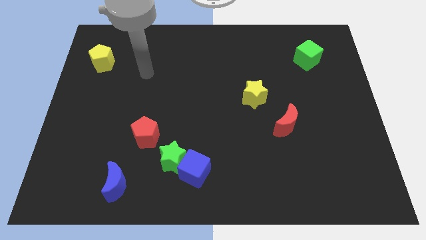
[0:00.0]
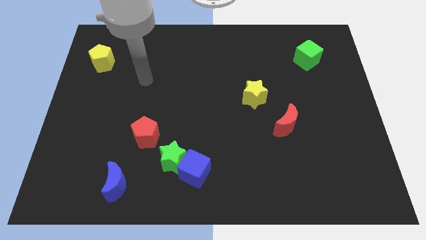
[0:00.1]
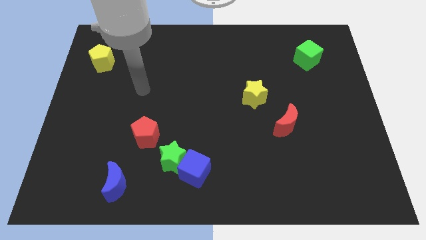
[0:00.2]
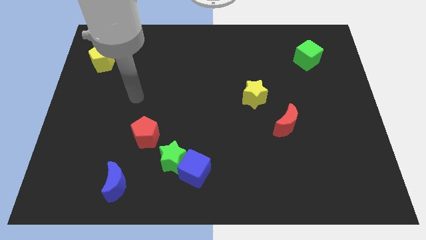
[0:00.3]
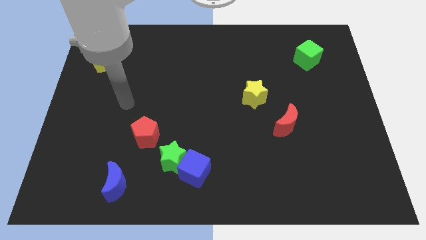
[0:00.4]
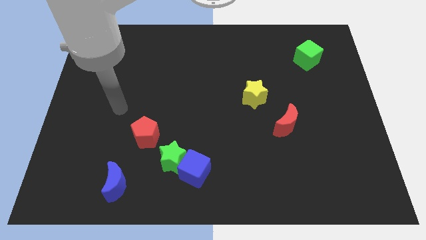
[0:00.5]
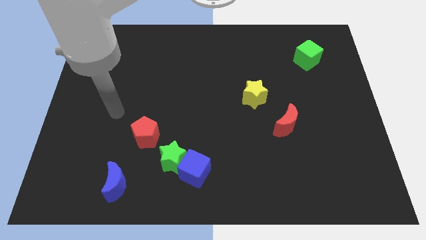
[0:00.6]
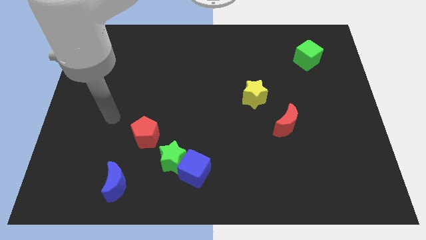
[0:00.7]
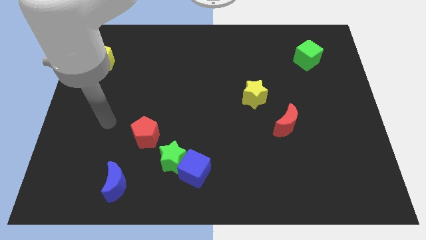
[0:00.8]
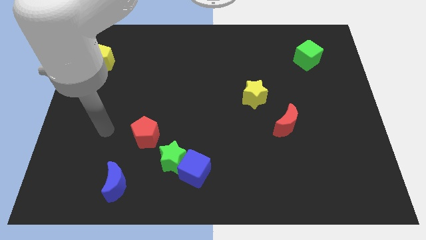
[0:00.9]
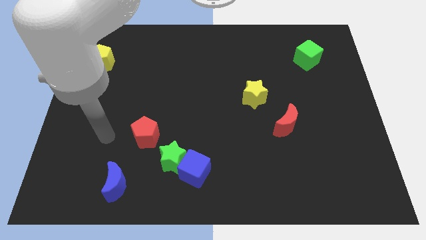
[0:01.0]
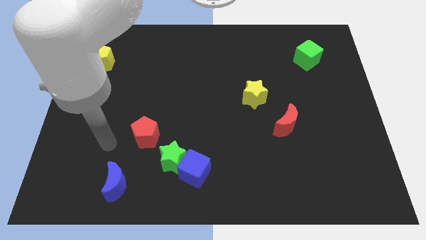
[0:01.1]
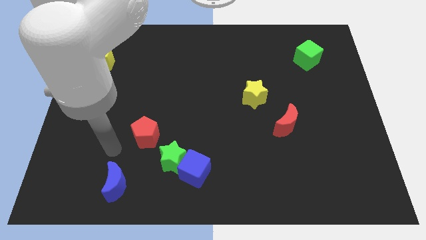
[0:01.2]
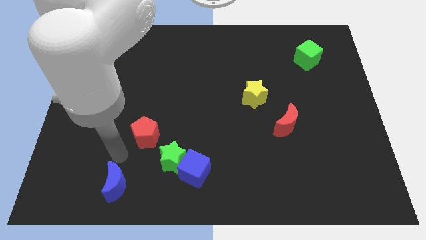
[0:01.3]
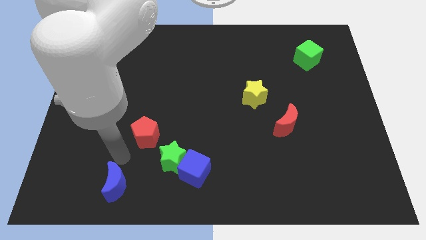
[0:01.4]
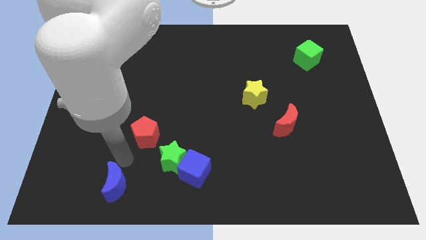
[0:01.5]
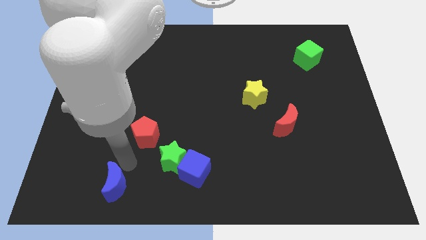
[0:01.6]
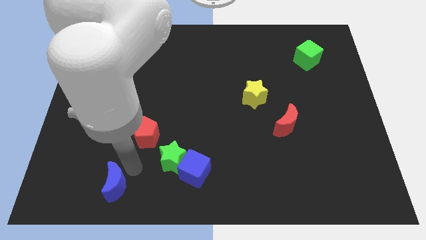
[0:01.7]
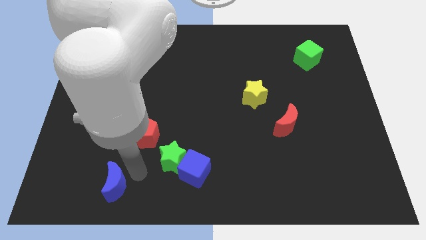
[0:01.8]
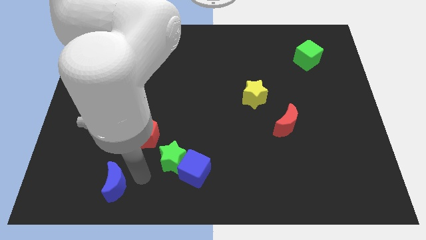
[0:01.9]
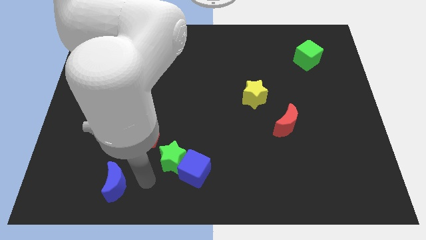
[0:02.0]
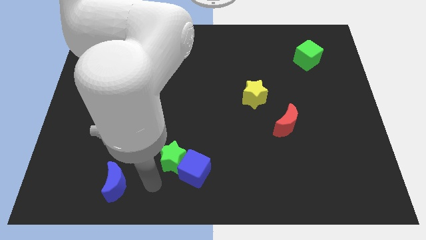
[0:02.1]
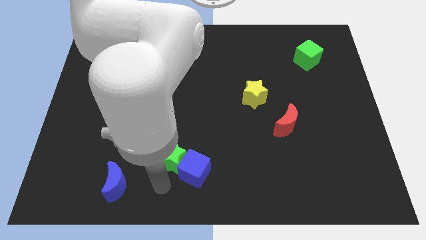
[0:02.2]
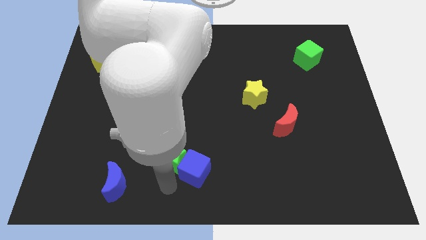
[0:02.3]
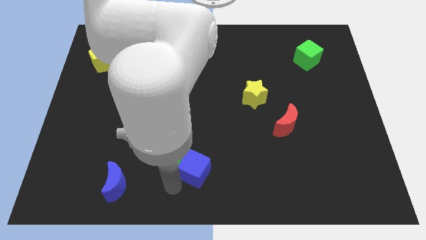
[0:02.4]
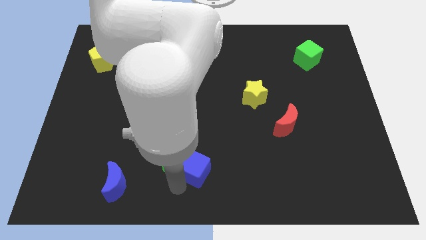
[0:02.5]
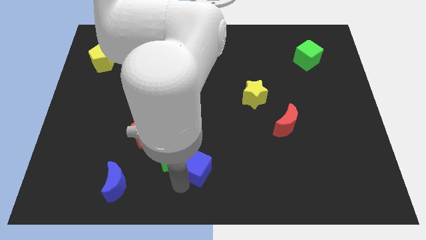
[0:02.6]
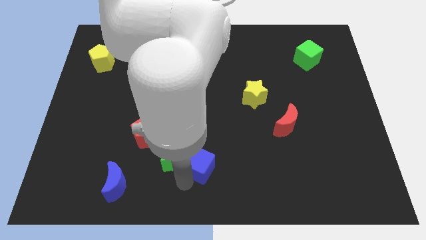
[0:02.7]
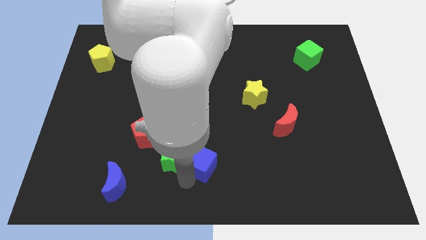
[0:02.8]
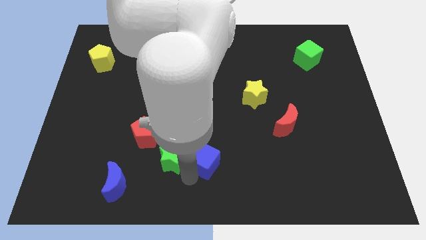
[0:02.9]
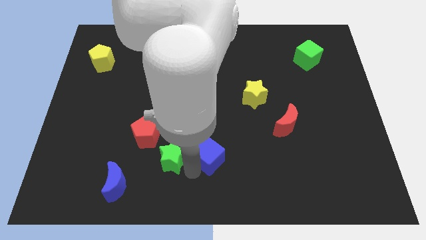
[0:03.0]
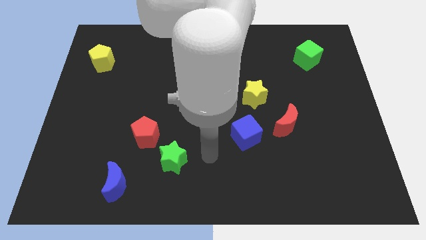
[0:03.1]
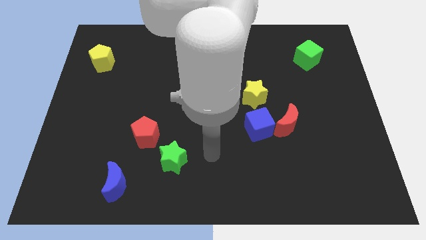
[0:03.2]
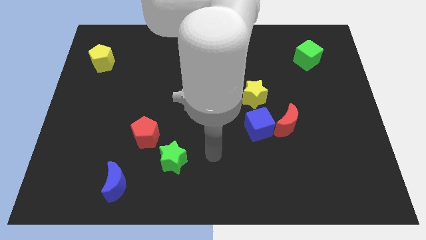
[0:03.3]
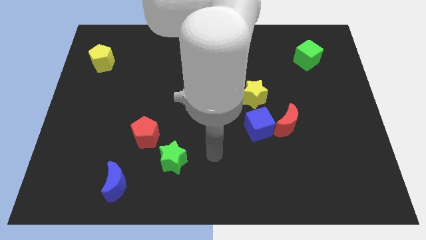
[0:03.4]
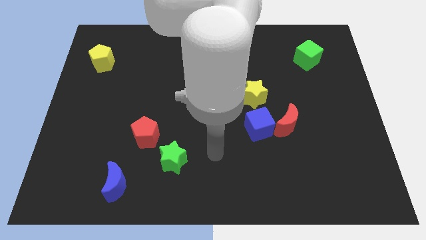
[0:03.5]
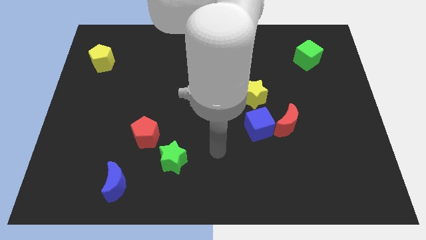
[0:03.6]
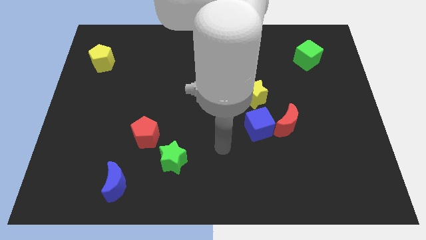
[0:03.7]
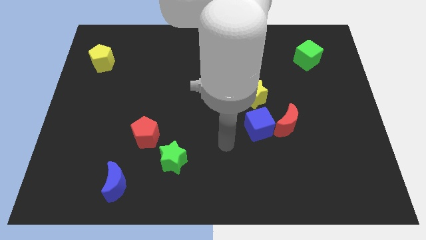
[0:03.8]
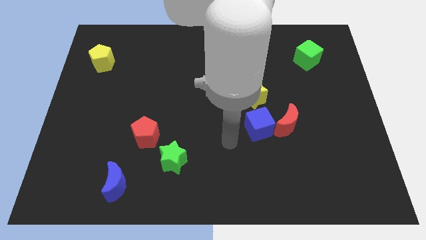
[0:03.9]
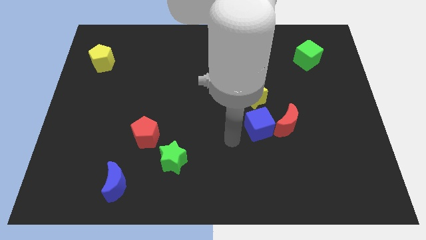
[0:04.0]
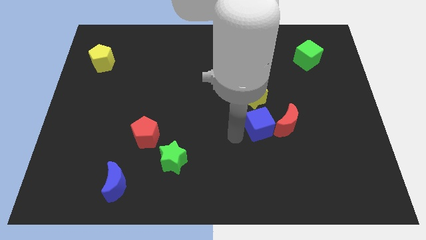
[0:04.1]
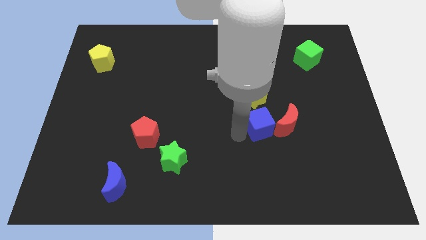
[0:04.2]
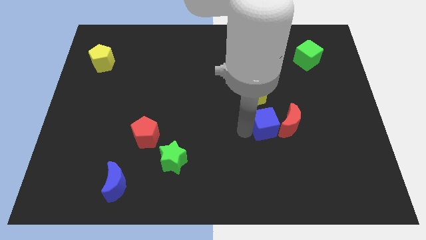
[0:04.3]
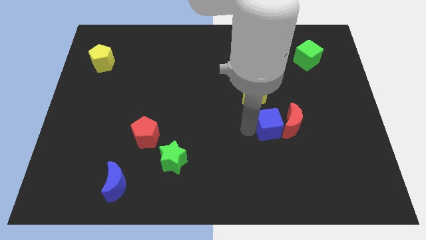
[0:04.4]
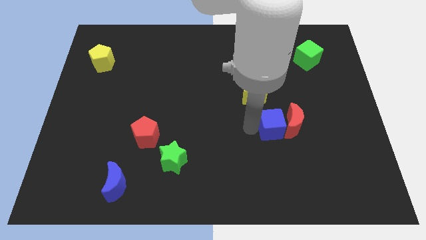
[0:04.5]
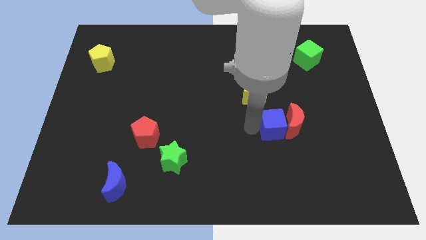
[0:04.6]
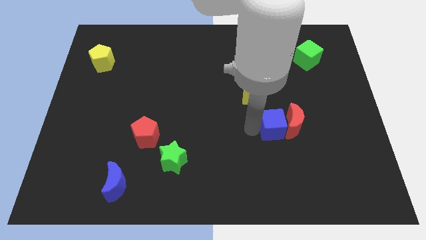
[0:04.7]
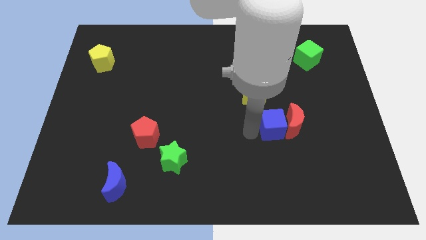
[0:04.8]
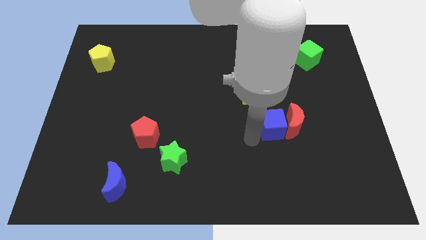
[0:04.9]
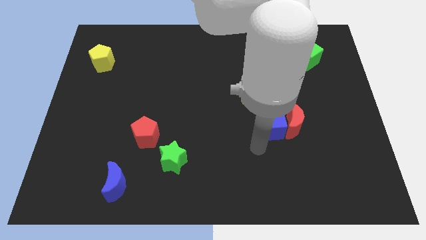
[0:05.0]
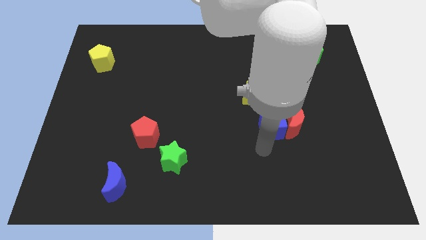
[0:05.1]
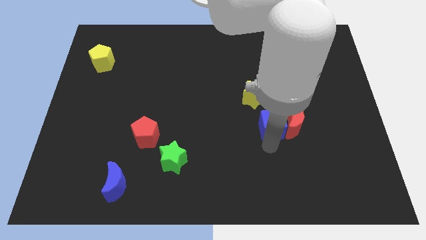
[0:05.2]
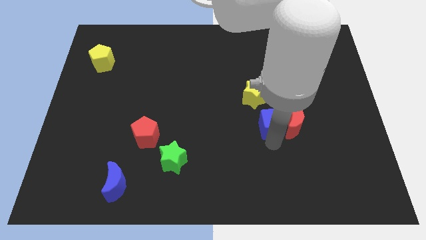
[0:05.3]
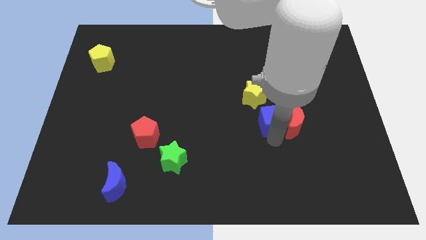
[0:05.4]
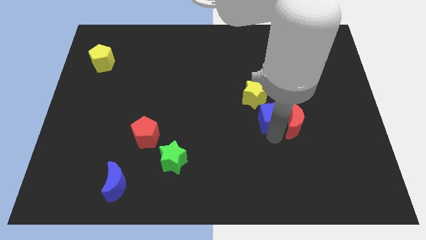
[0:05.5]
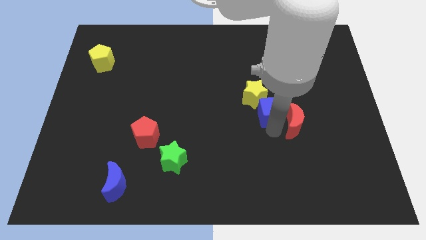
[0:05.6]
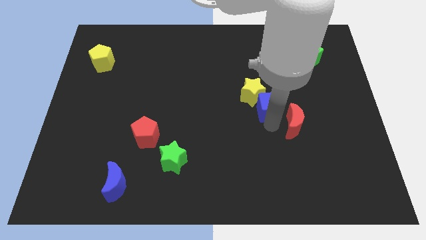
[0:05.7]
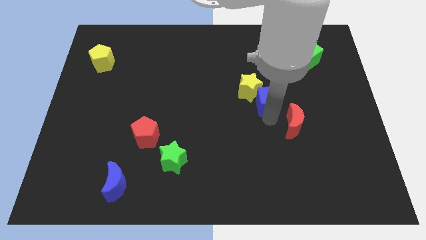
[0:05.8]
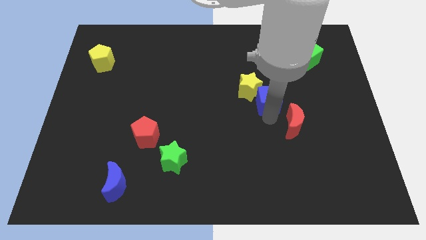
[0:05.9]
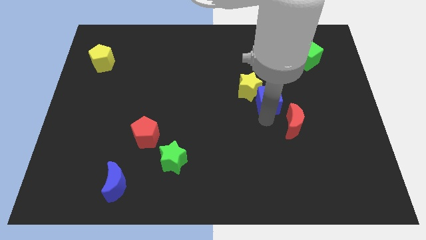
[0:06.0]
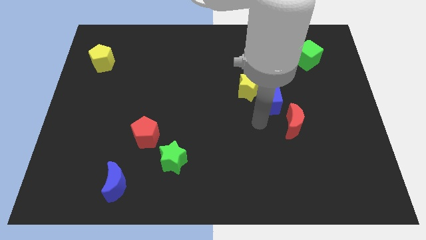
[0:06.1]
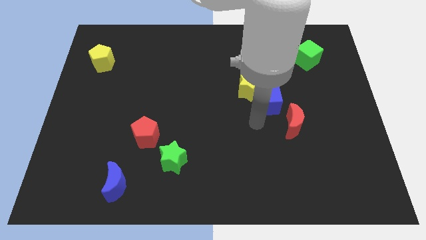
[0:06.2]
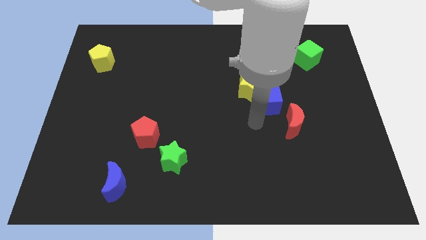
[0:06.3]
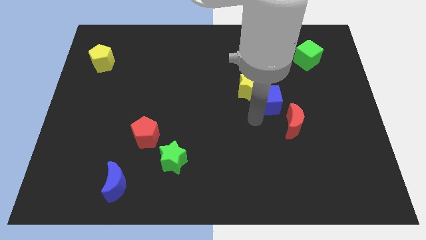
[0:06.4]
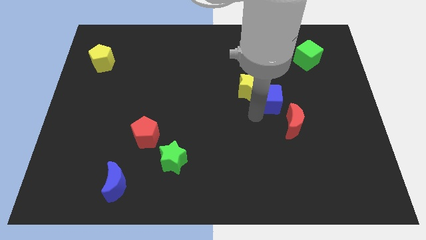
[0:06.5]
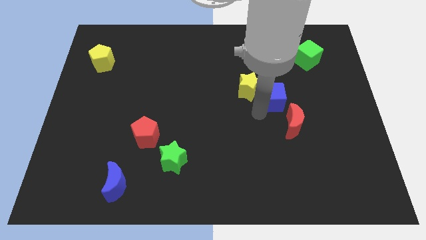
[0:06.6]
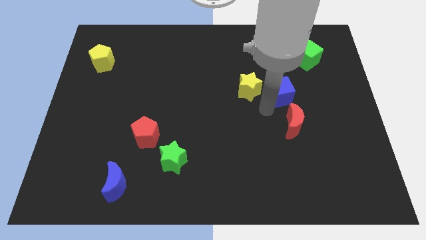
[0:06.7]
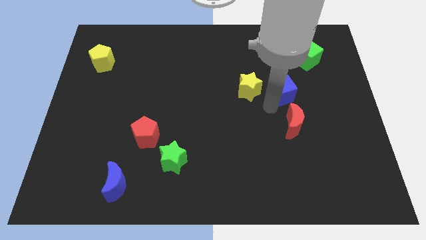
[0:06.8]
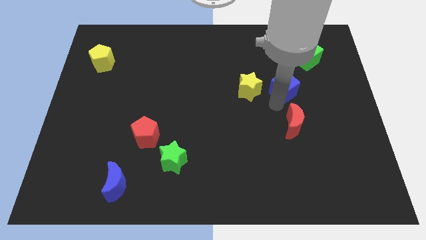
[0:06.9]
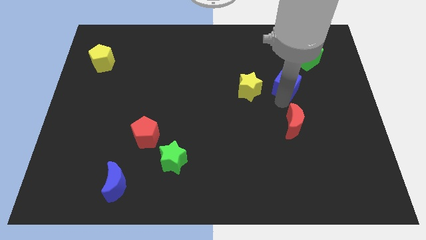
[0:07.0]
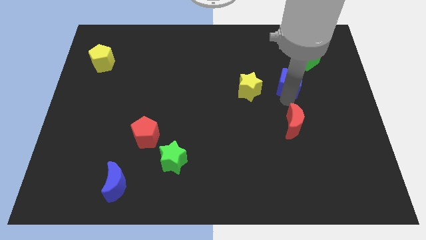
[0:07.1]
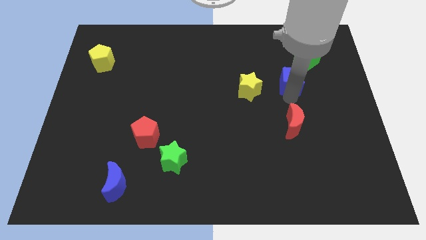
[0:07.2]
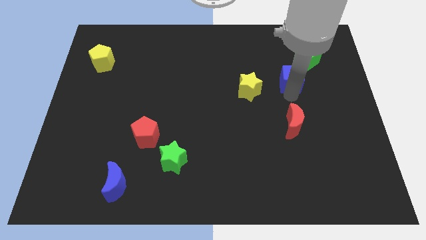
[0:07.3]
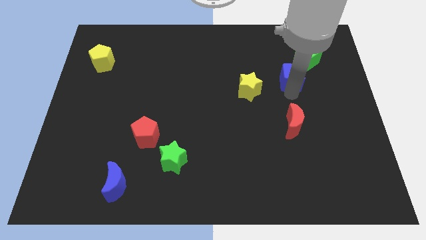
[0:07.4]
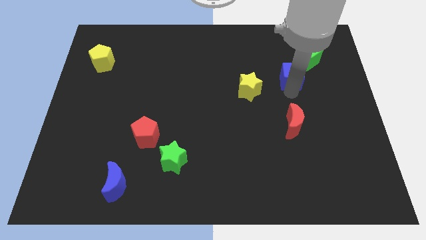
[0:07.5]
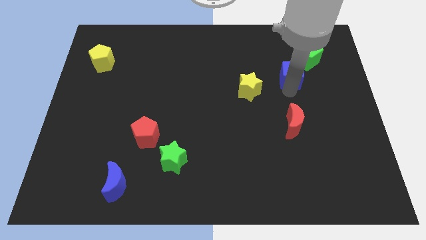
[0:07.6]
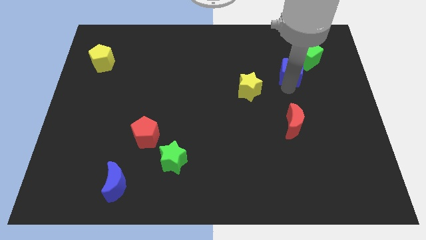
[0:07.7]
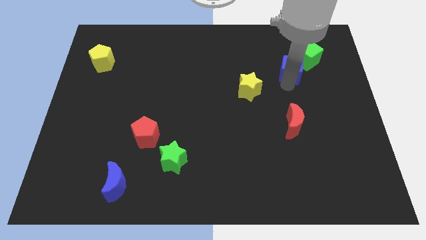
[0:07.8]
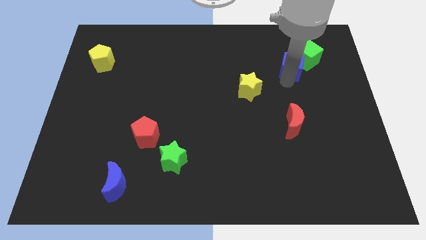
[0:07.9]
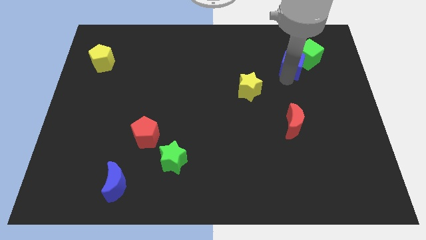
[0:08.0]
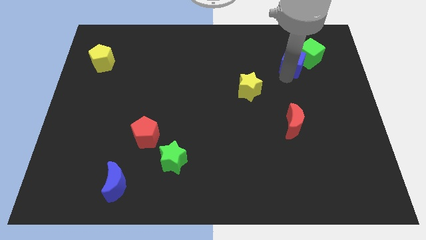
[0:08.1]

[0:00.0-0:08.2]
move the blue cube towards the green cube

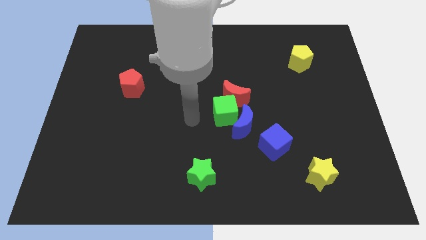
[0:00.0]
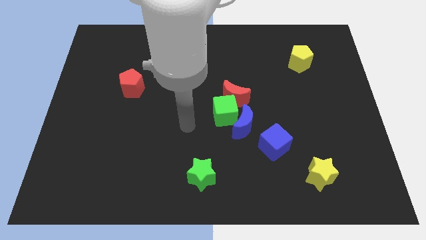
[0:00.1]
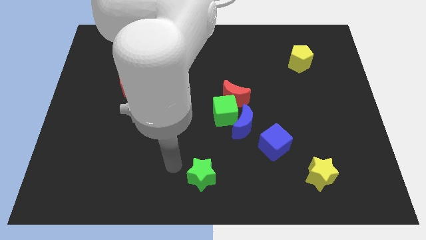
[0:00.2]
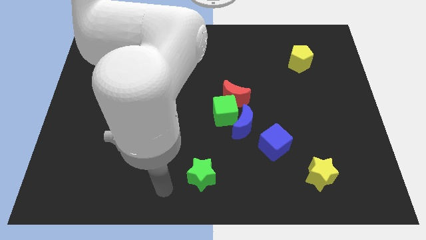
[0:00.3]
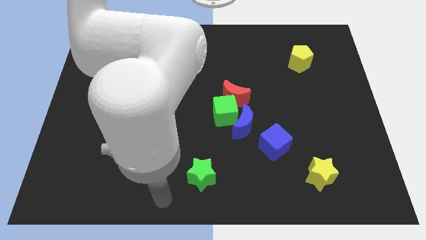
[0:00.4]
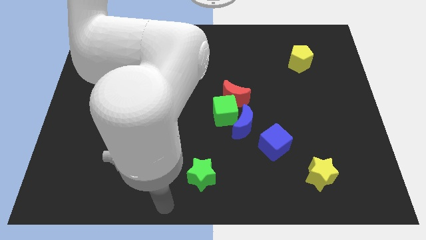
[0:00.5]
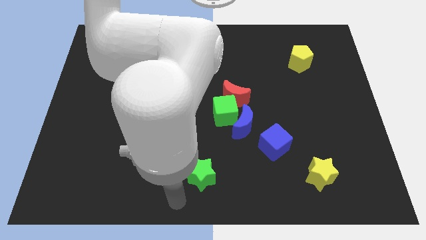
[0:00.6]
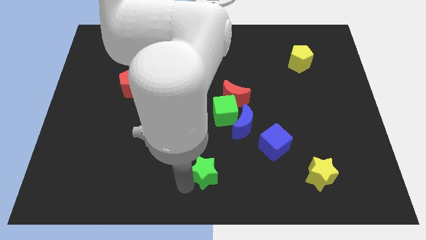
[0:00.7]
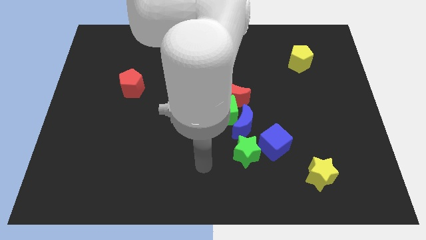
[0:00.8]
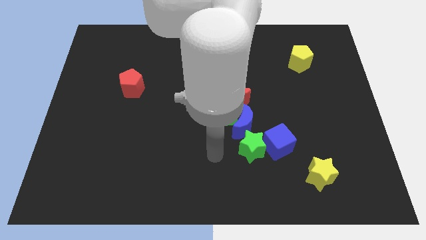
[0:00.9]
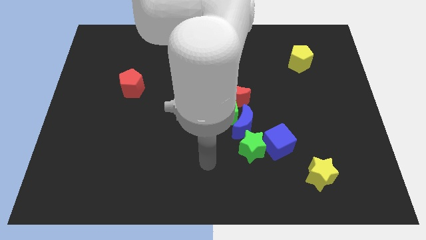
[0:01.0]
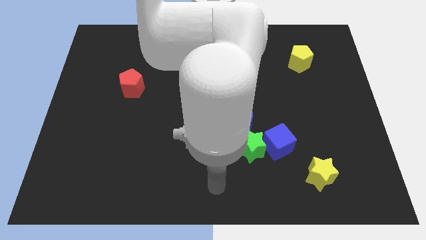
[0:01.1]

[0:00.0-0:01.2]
put the green star close to the blue moon
